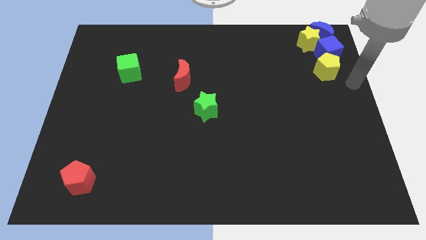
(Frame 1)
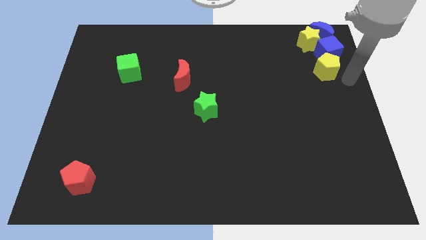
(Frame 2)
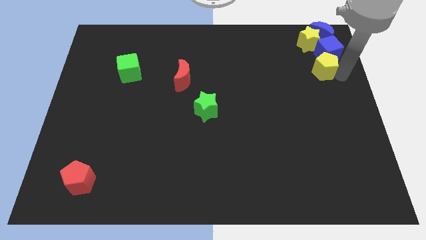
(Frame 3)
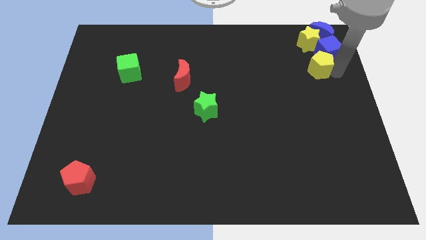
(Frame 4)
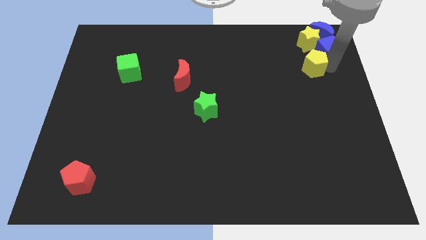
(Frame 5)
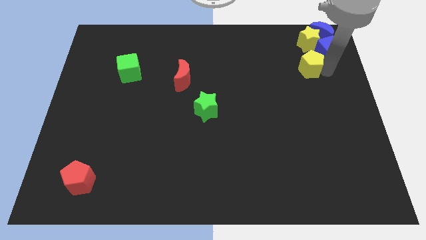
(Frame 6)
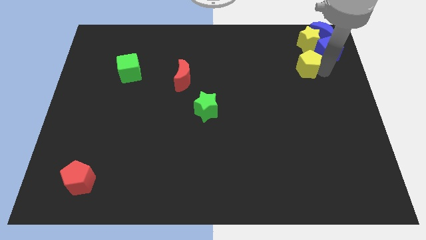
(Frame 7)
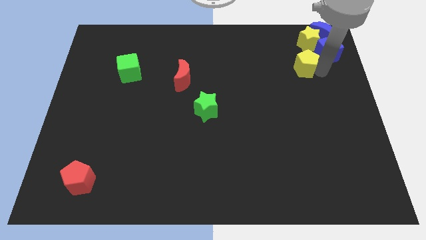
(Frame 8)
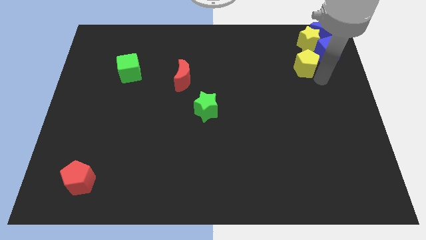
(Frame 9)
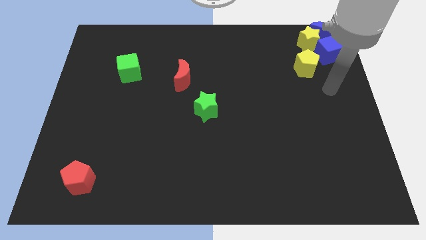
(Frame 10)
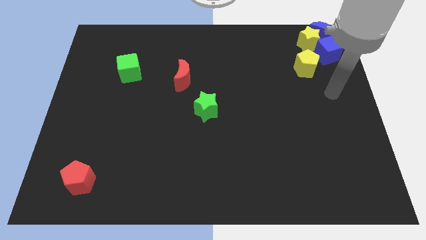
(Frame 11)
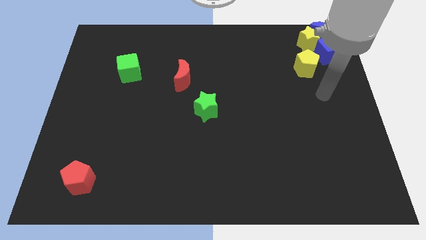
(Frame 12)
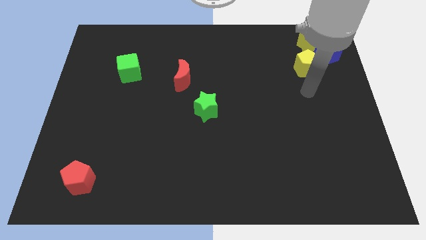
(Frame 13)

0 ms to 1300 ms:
slightly move yellow pentagon to left

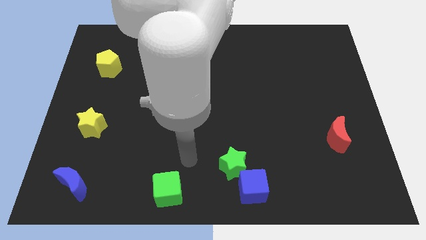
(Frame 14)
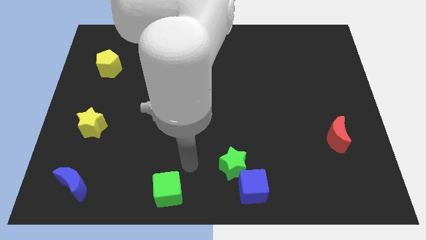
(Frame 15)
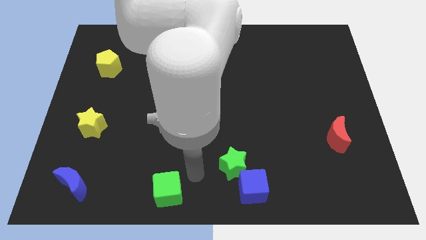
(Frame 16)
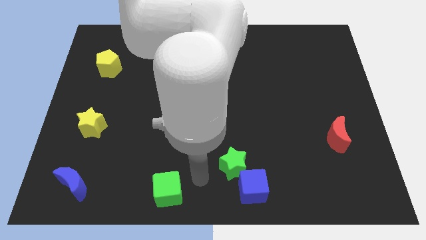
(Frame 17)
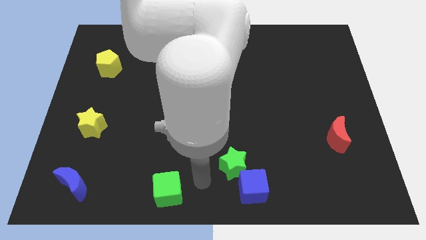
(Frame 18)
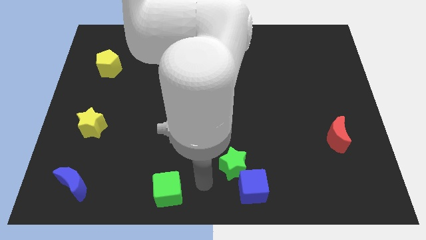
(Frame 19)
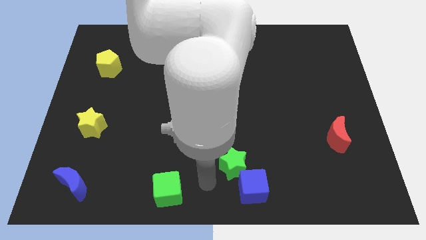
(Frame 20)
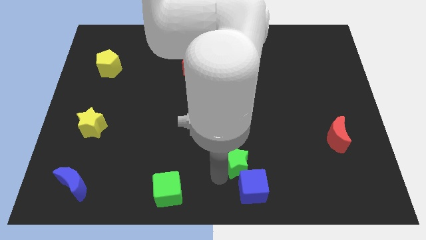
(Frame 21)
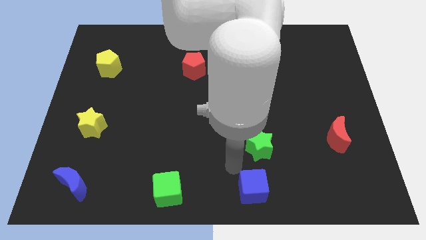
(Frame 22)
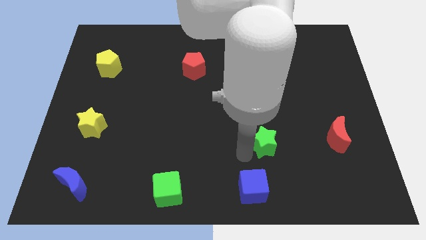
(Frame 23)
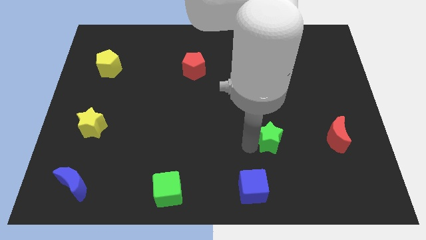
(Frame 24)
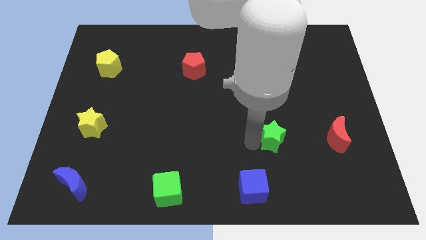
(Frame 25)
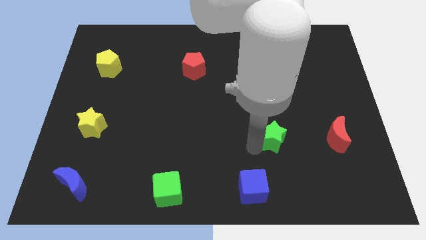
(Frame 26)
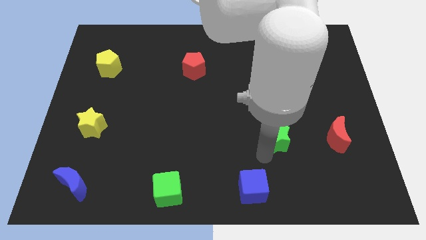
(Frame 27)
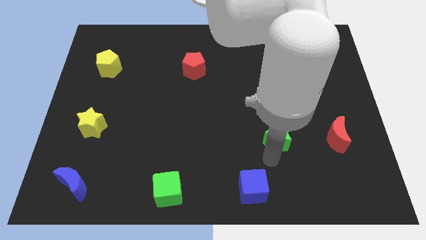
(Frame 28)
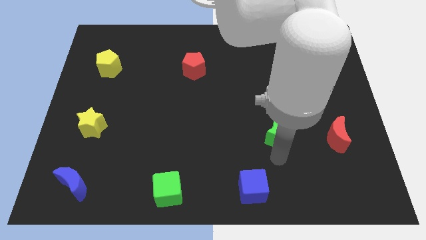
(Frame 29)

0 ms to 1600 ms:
separate the green star from the blue cube

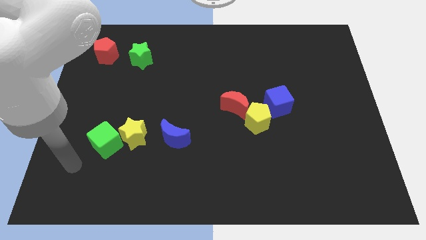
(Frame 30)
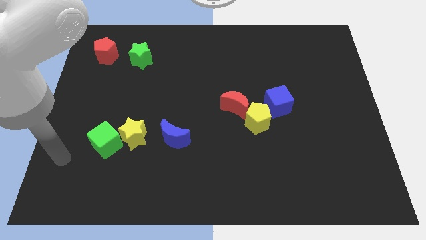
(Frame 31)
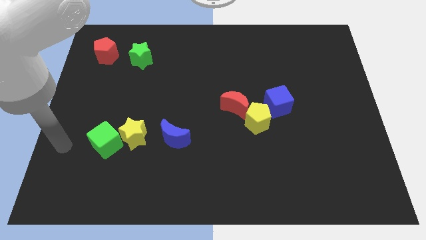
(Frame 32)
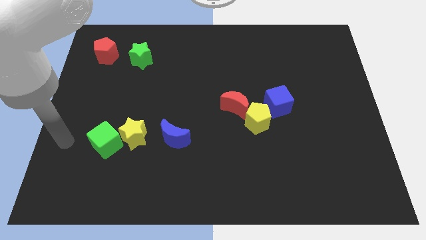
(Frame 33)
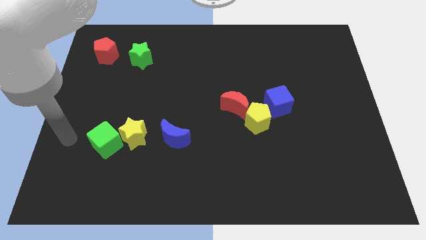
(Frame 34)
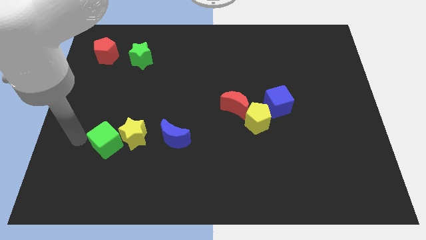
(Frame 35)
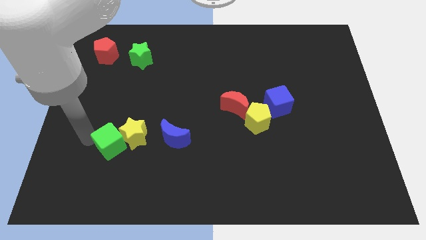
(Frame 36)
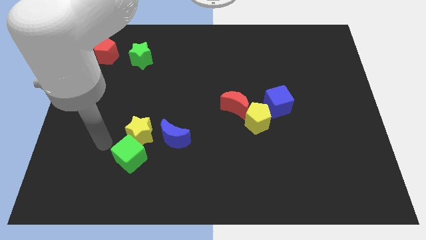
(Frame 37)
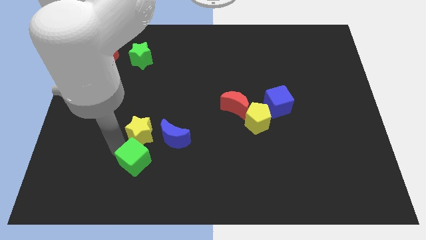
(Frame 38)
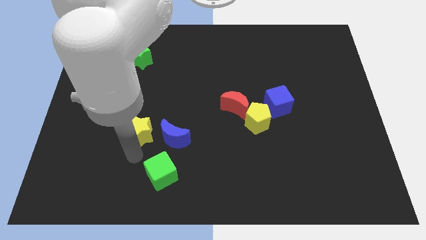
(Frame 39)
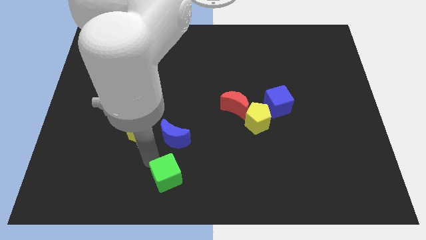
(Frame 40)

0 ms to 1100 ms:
place green cube below blue crescent

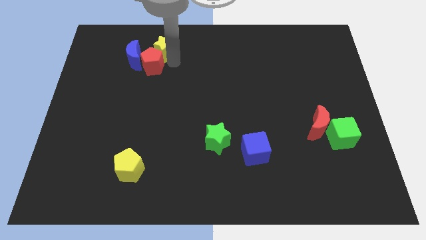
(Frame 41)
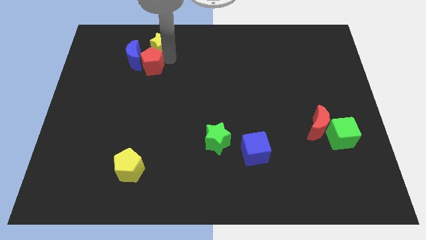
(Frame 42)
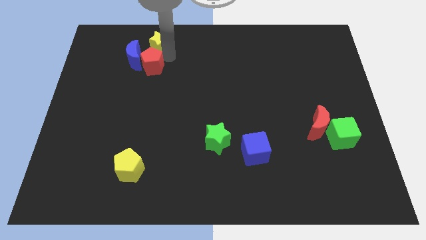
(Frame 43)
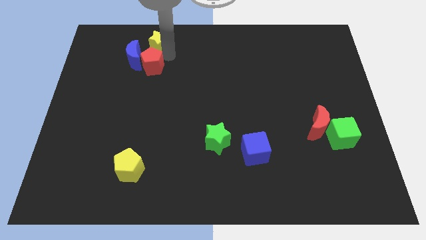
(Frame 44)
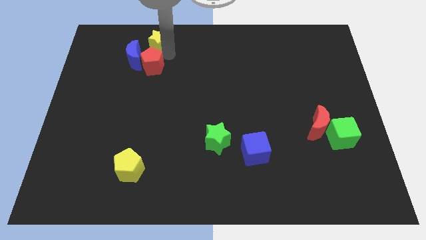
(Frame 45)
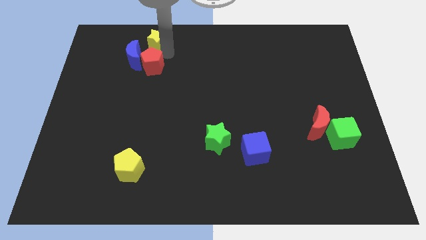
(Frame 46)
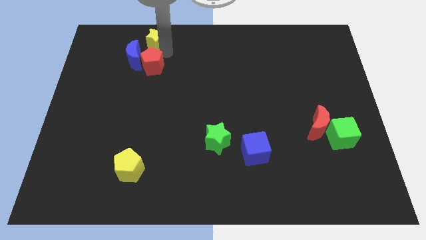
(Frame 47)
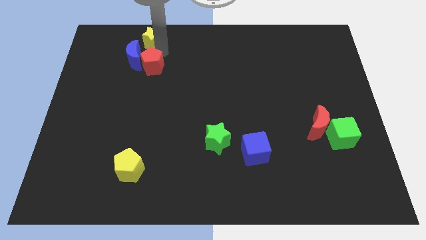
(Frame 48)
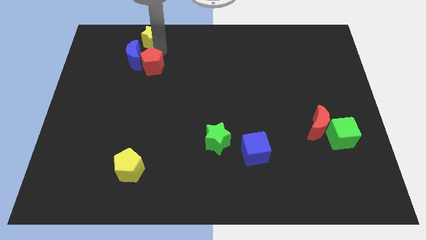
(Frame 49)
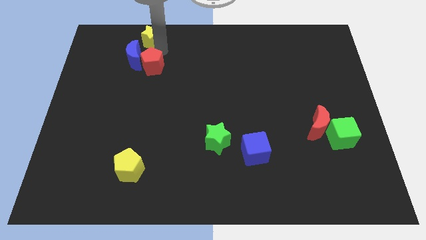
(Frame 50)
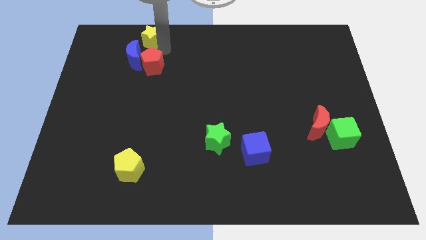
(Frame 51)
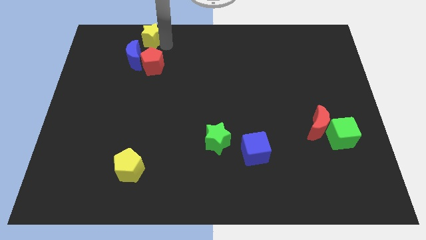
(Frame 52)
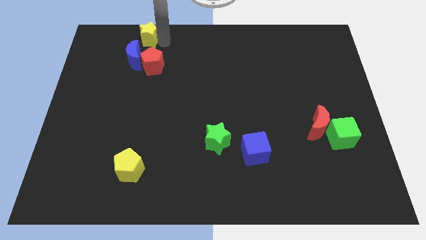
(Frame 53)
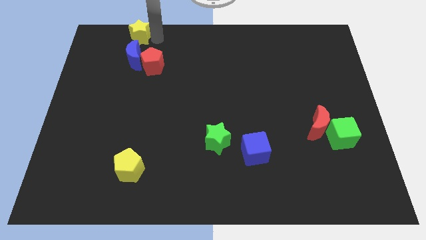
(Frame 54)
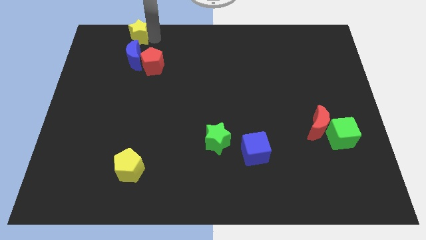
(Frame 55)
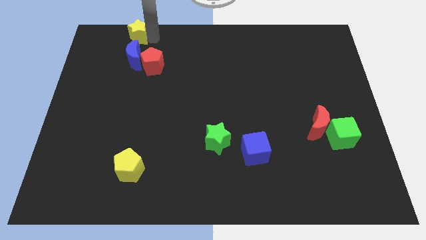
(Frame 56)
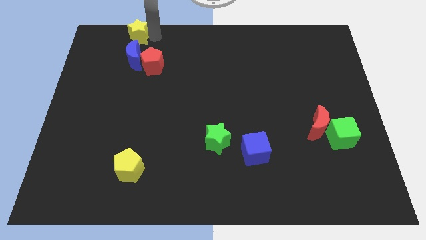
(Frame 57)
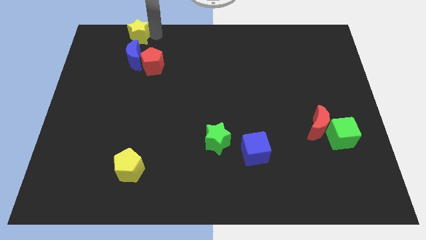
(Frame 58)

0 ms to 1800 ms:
slightly push the yellow star

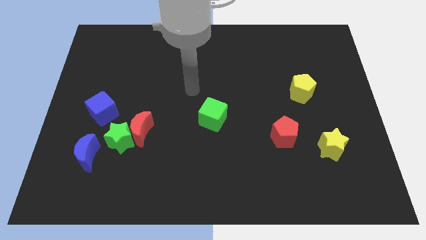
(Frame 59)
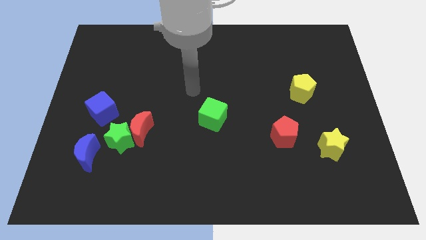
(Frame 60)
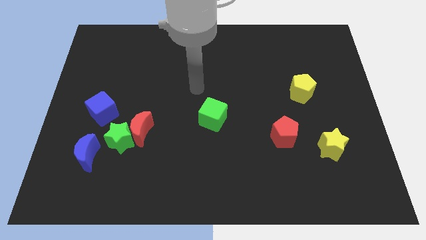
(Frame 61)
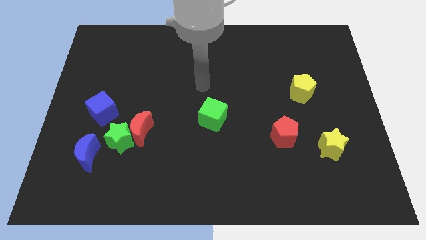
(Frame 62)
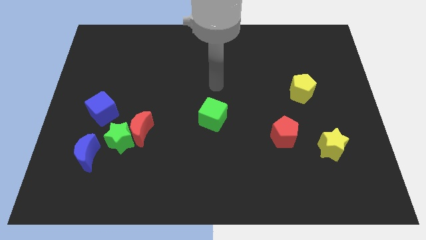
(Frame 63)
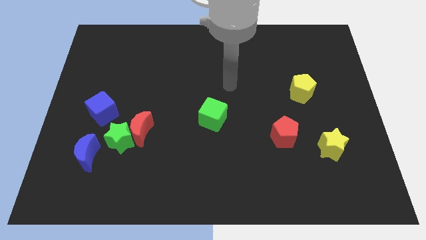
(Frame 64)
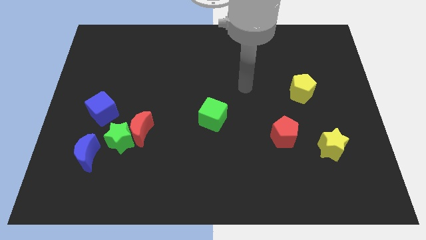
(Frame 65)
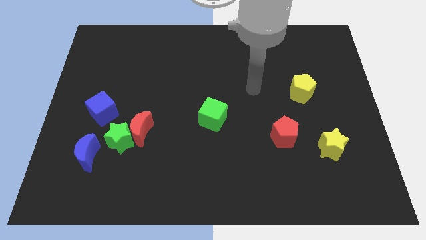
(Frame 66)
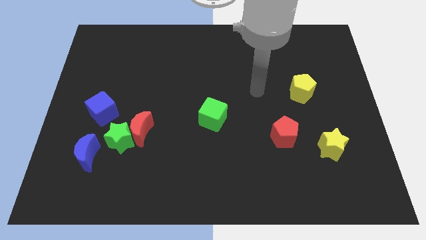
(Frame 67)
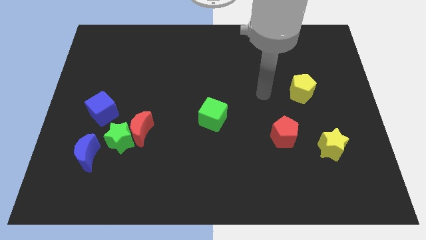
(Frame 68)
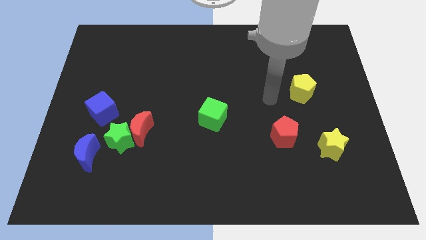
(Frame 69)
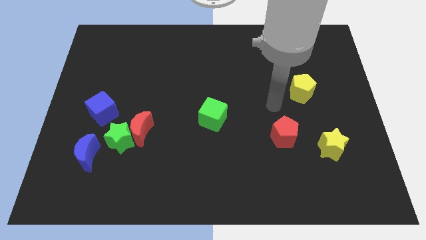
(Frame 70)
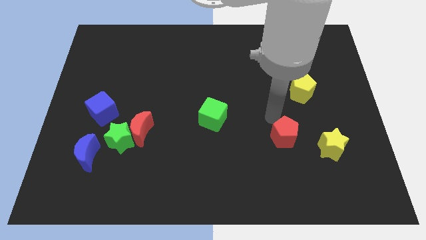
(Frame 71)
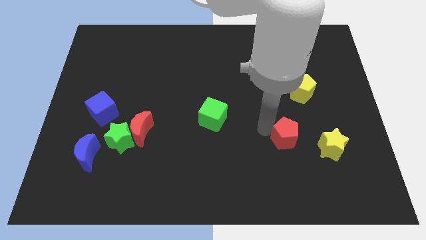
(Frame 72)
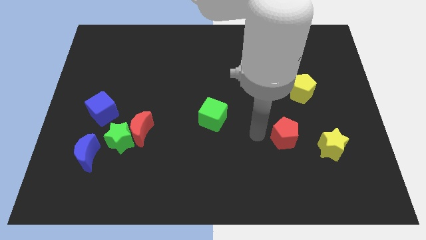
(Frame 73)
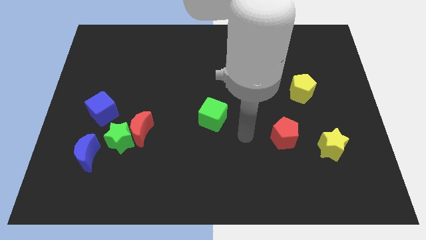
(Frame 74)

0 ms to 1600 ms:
place your arm in between the green cube and red pentagon

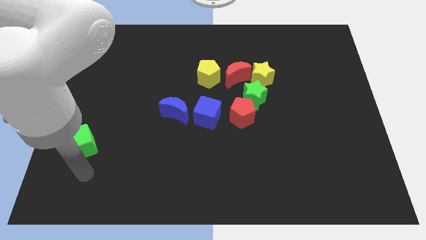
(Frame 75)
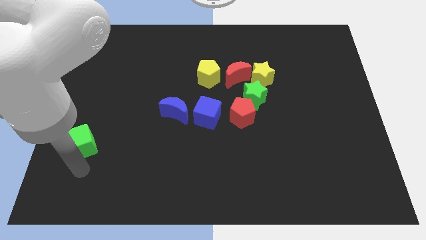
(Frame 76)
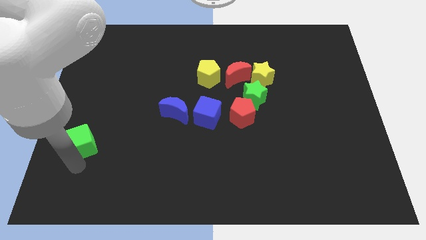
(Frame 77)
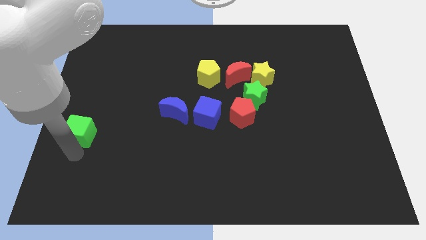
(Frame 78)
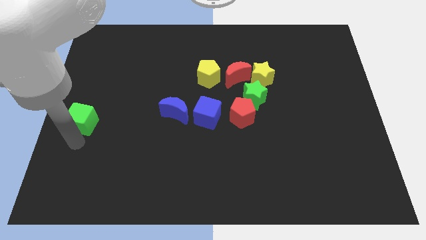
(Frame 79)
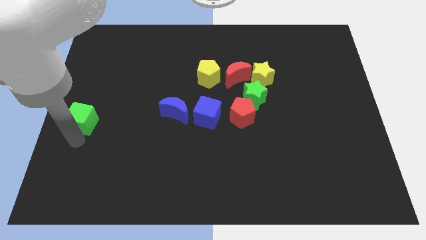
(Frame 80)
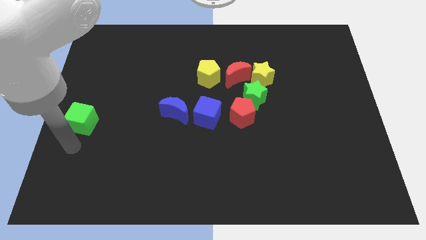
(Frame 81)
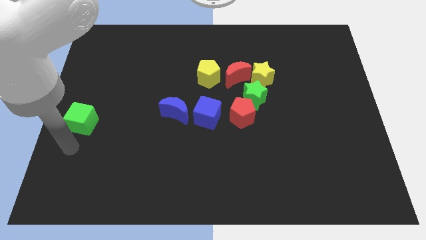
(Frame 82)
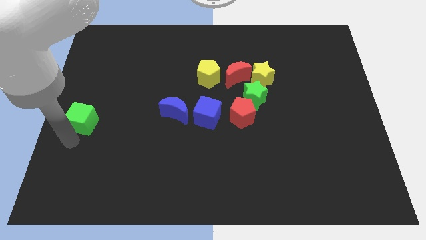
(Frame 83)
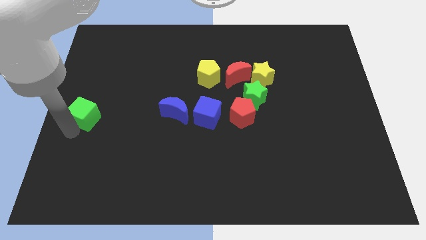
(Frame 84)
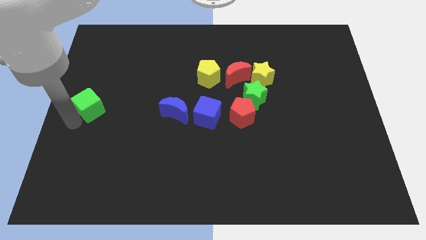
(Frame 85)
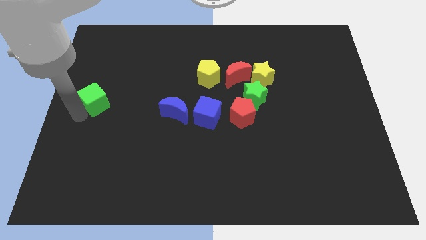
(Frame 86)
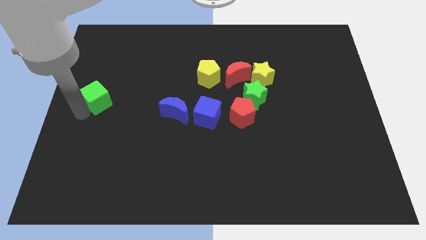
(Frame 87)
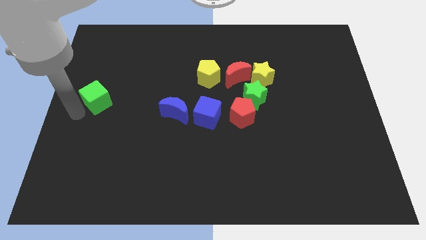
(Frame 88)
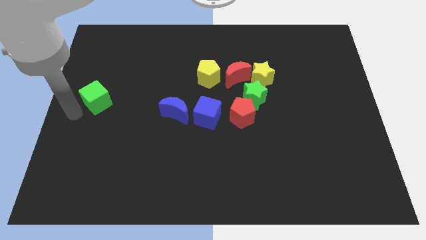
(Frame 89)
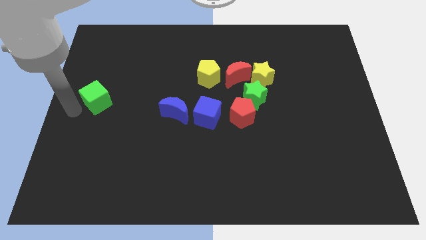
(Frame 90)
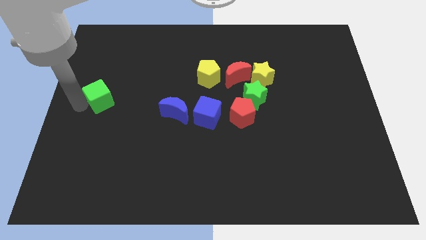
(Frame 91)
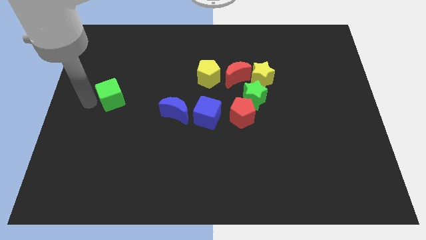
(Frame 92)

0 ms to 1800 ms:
push the green cube to the center
